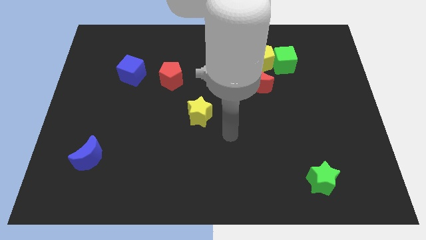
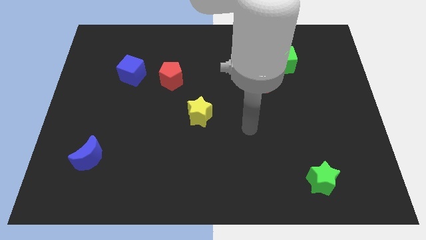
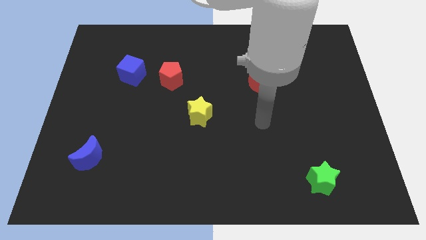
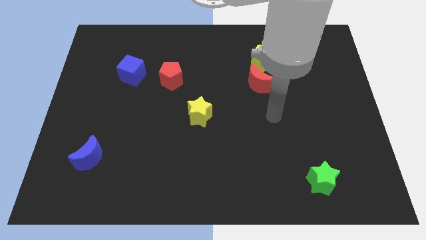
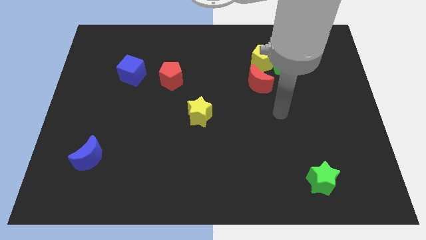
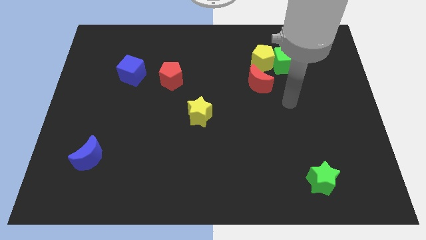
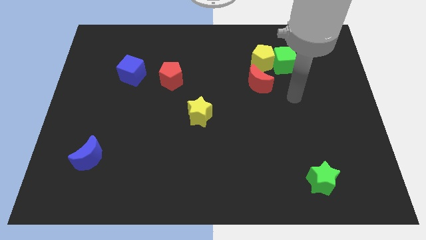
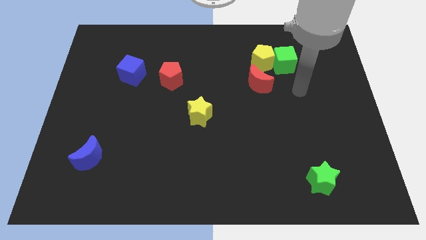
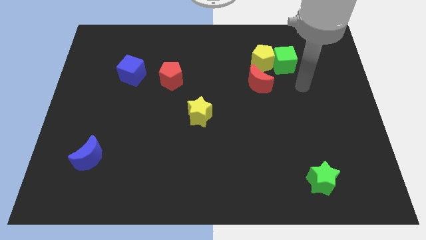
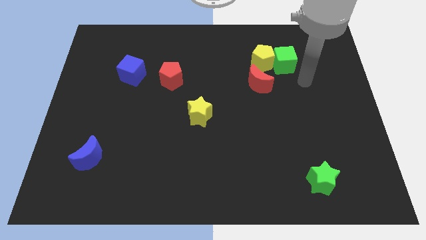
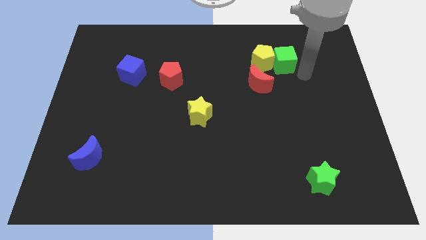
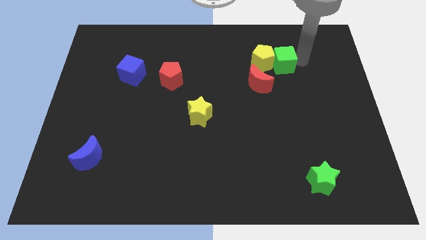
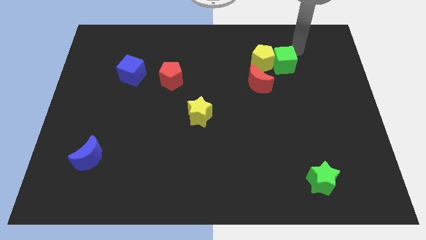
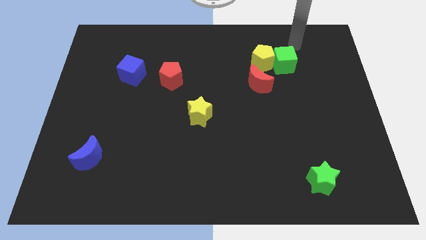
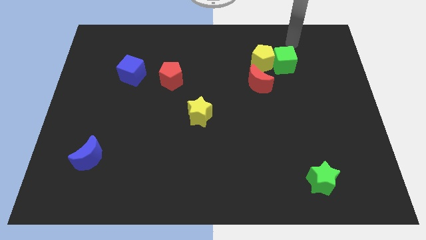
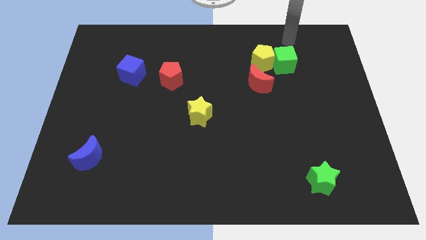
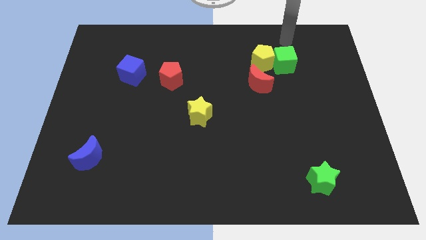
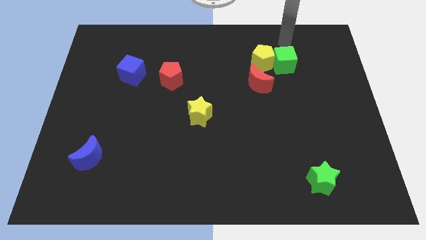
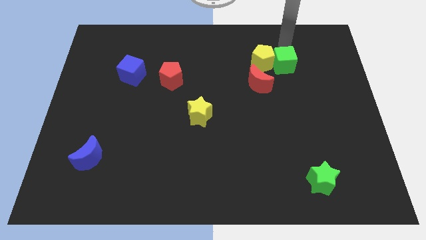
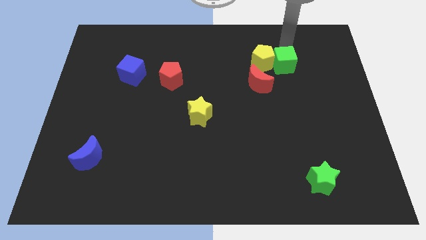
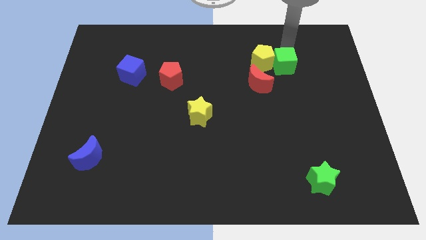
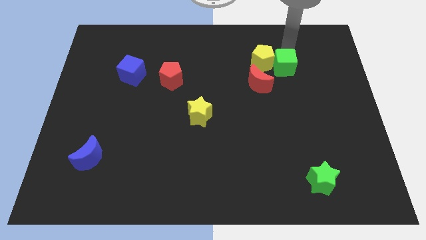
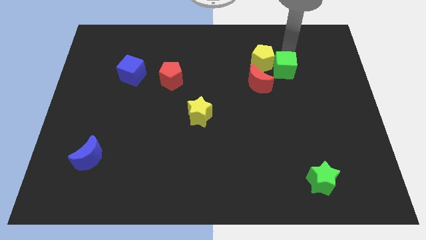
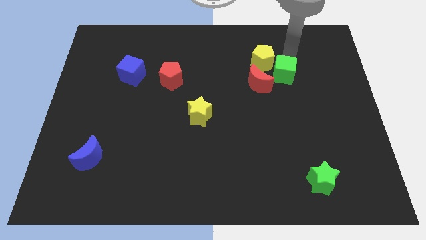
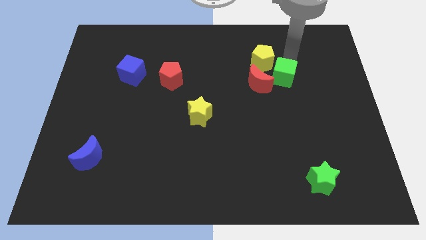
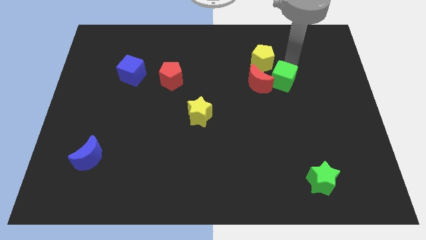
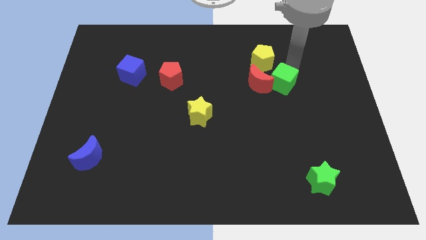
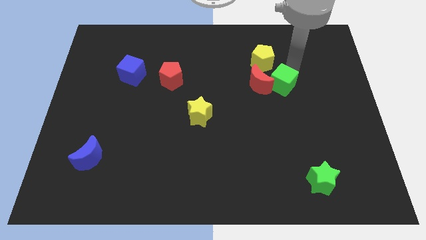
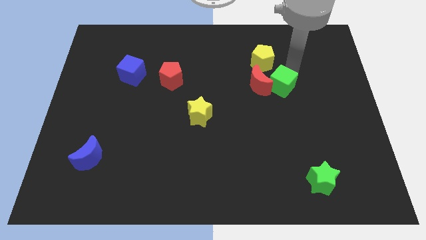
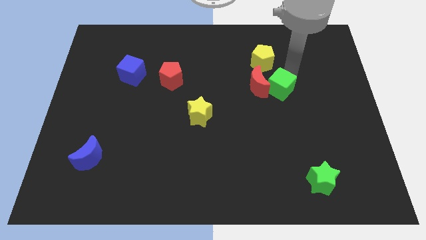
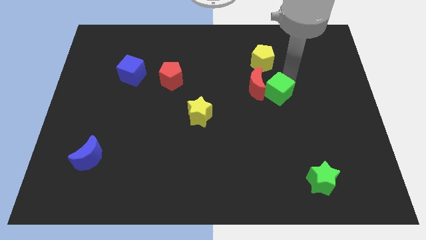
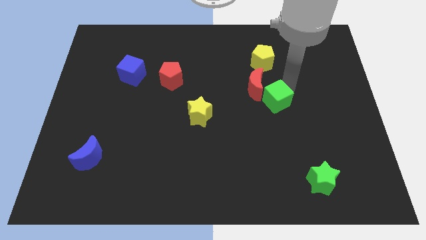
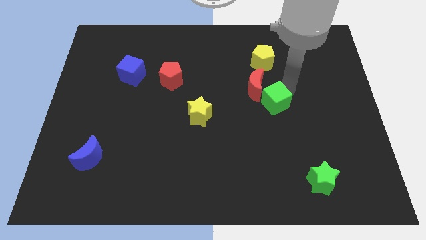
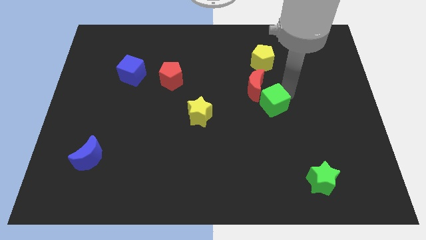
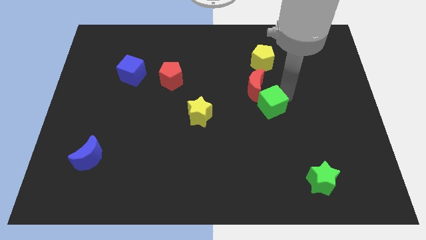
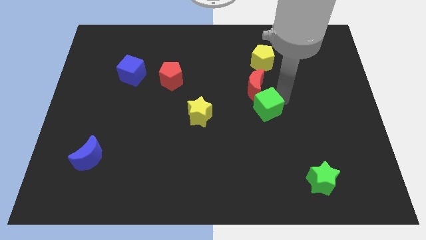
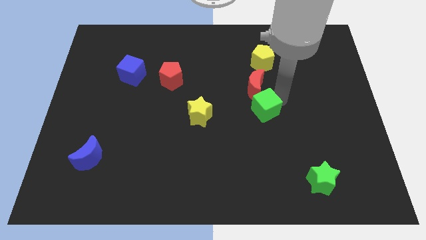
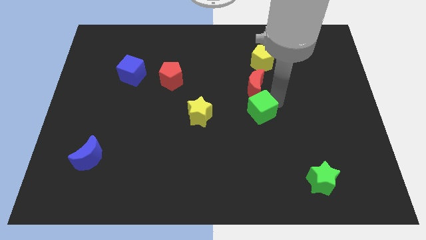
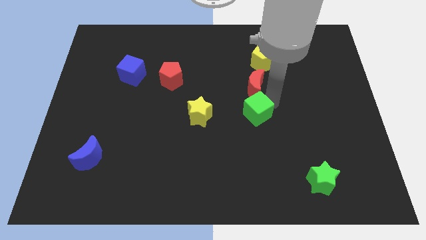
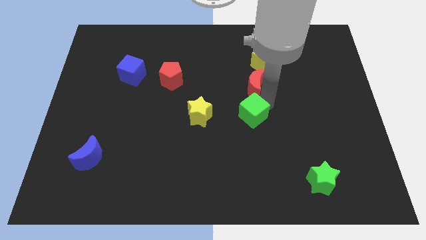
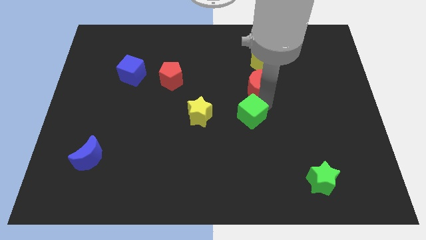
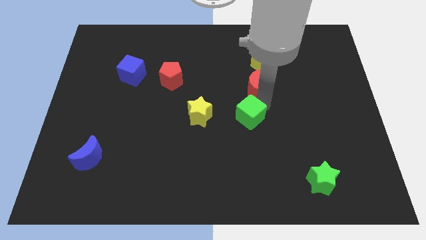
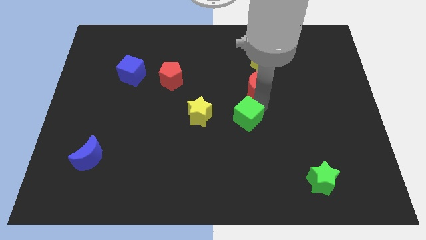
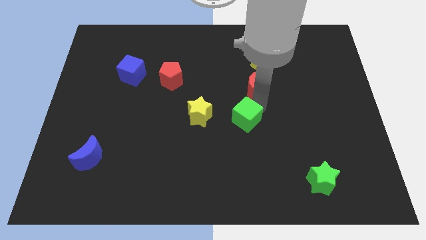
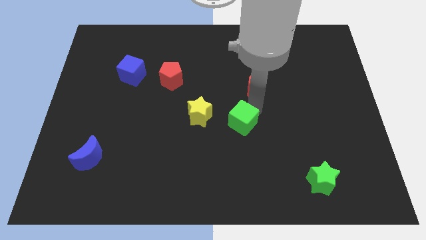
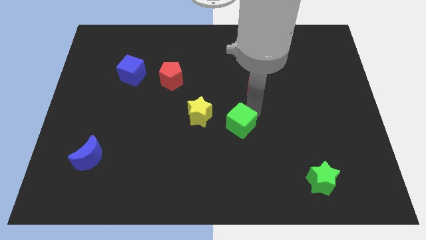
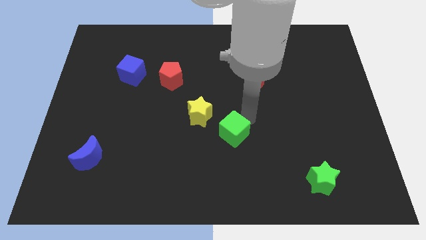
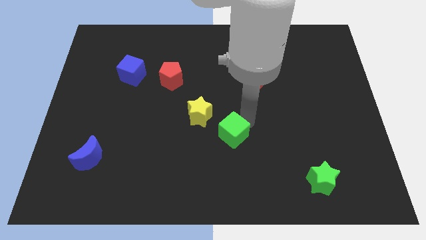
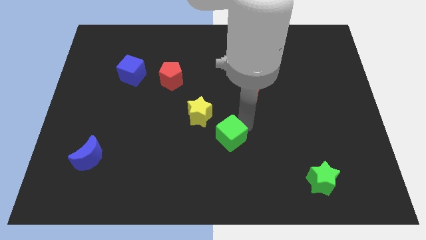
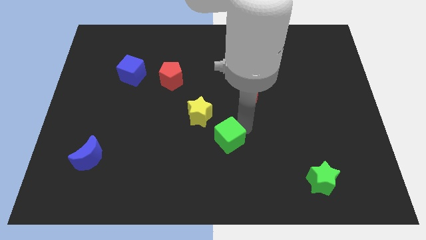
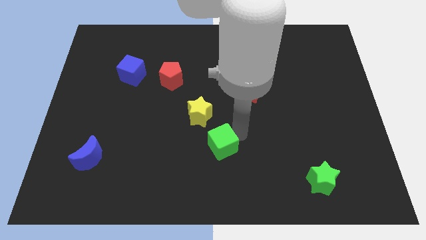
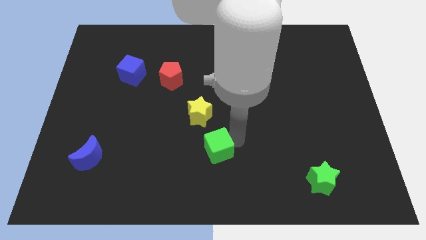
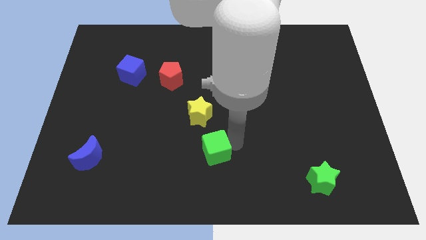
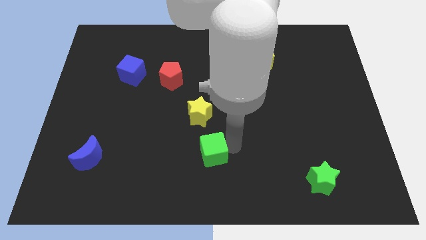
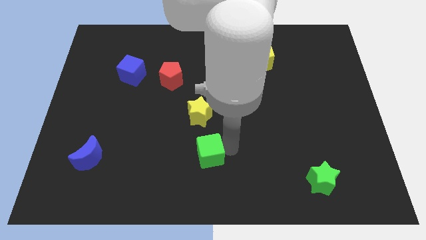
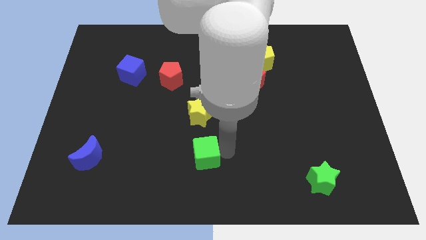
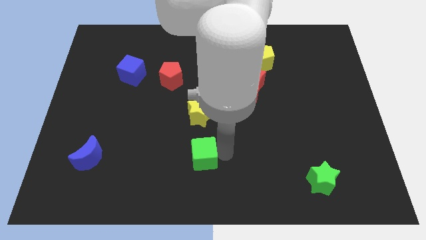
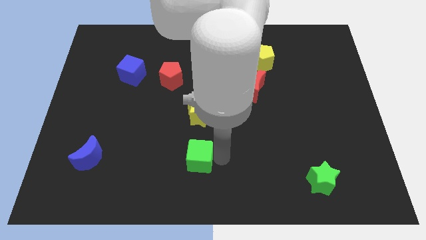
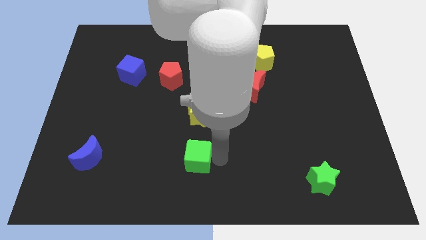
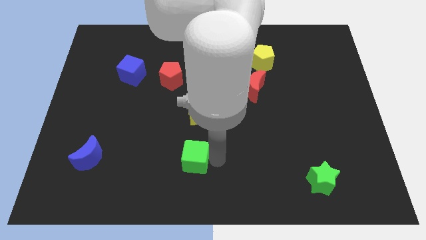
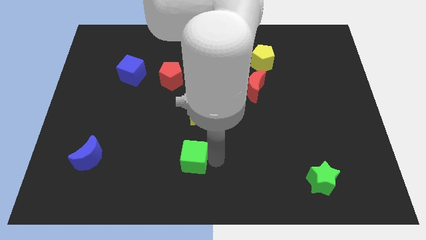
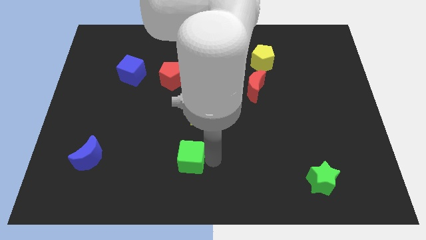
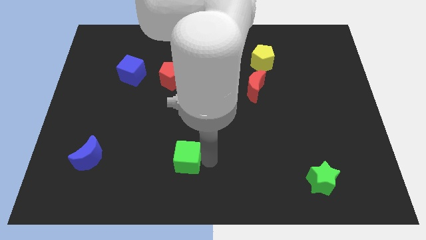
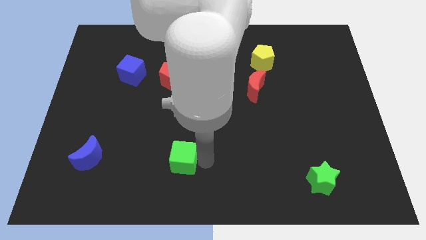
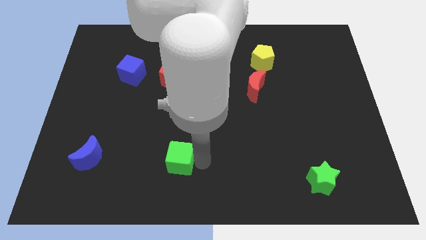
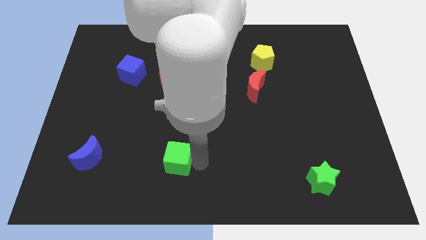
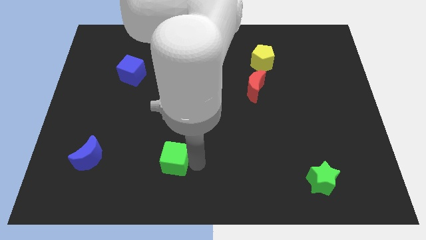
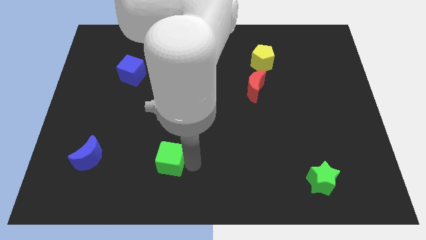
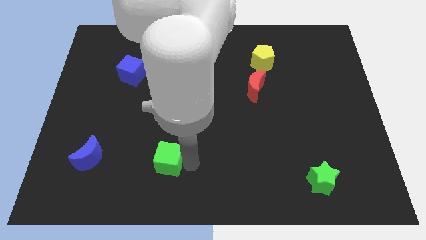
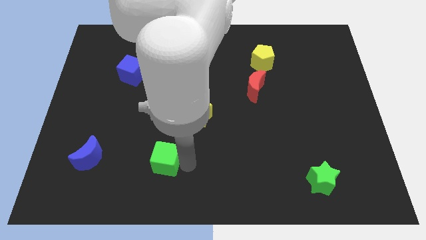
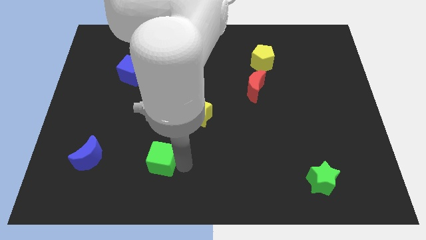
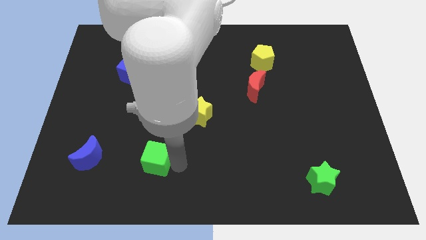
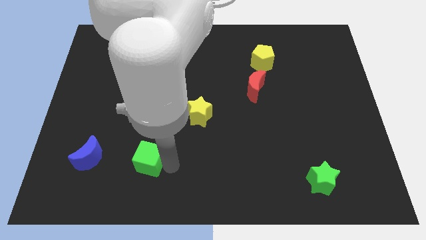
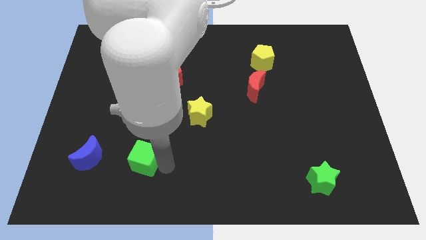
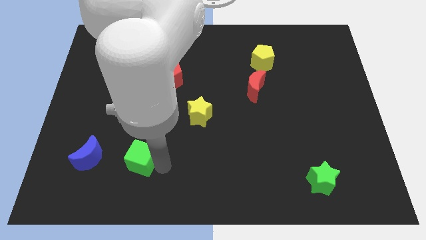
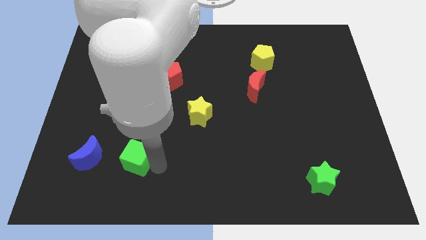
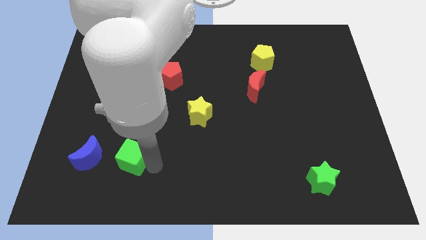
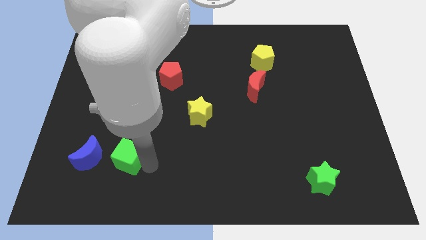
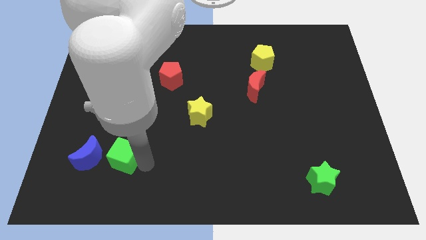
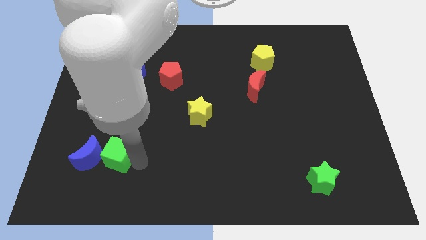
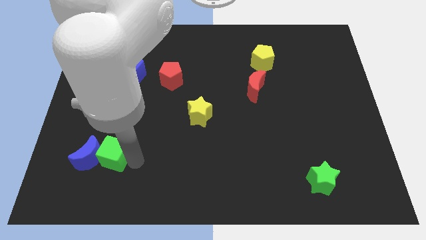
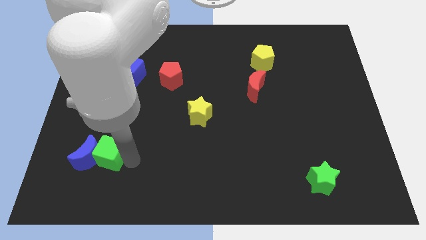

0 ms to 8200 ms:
put the green cube next to the blue moon
